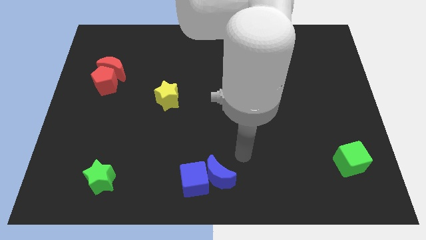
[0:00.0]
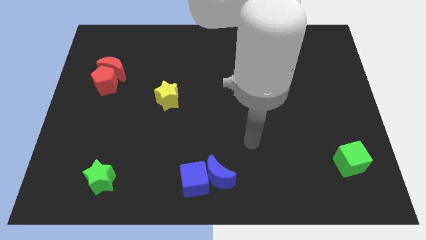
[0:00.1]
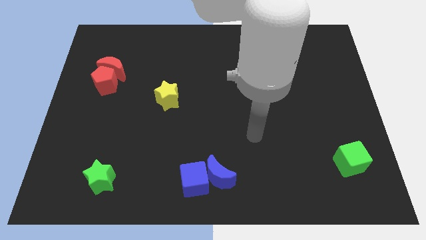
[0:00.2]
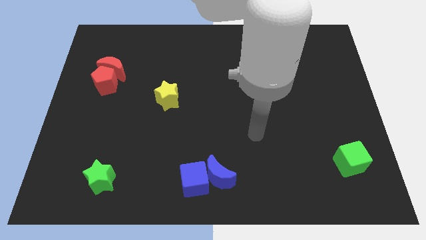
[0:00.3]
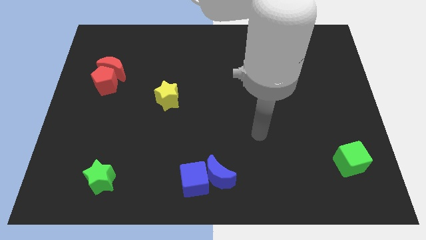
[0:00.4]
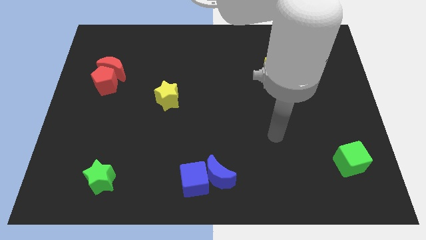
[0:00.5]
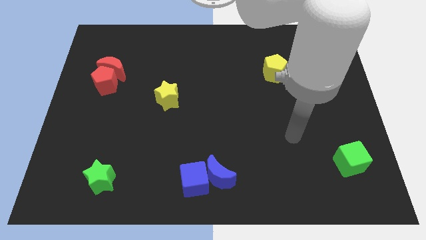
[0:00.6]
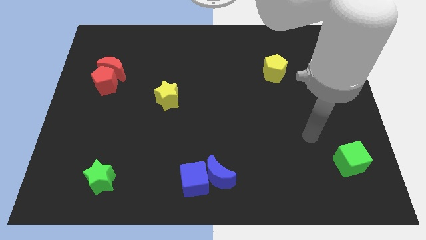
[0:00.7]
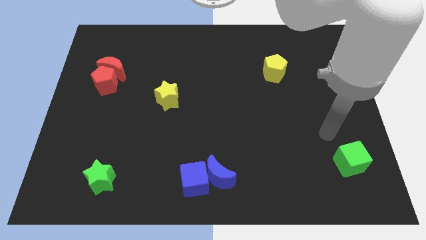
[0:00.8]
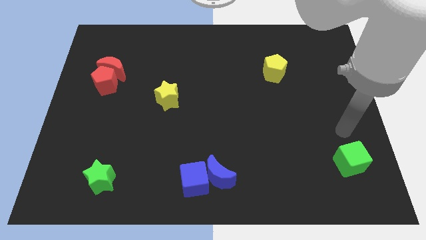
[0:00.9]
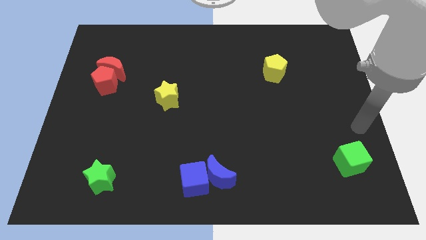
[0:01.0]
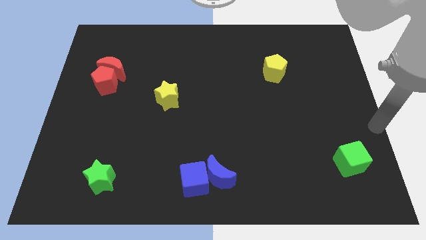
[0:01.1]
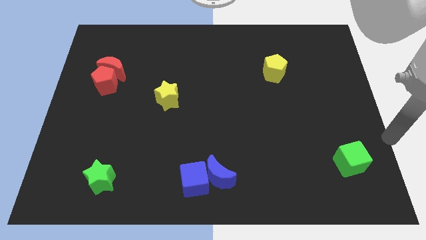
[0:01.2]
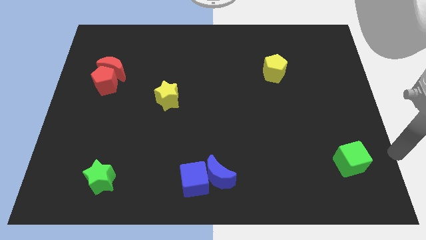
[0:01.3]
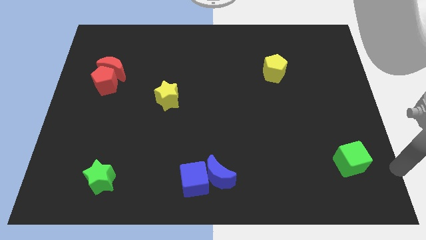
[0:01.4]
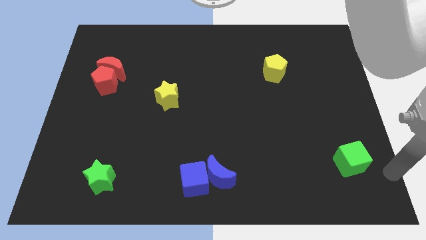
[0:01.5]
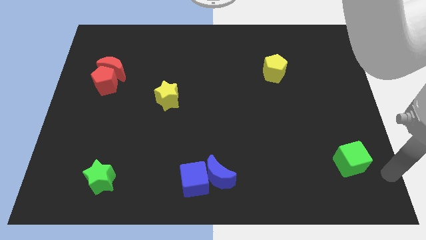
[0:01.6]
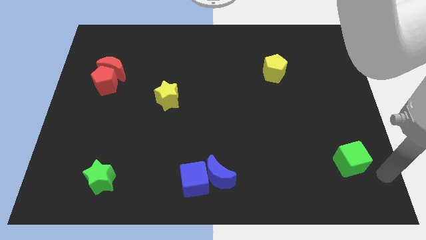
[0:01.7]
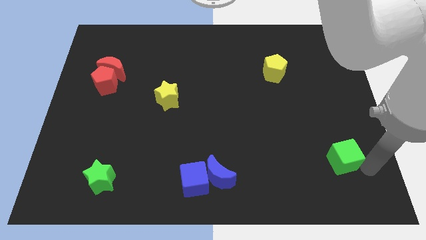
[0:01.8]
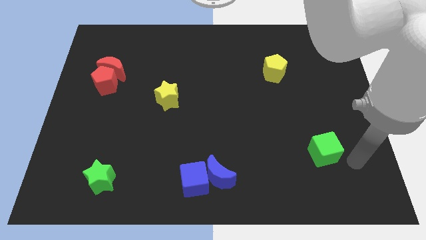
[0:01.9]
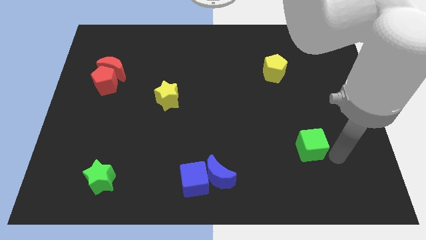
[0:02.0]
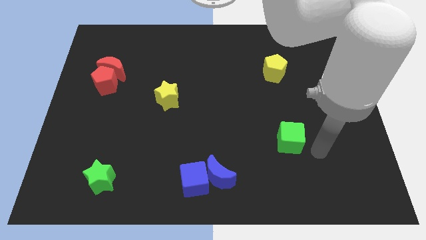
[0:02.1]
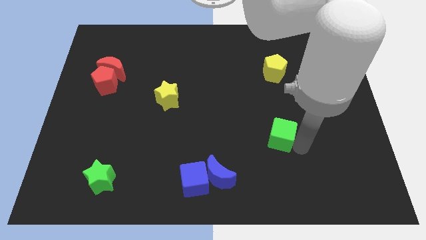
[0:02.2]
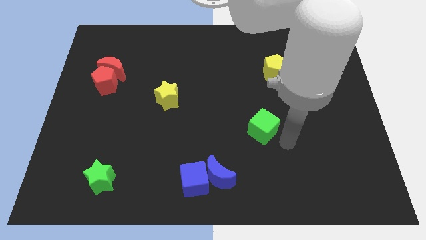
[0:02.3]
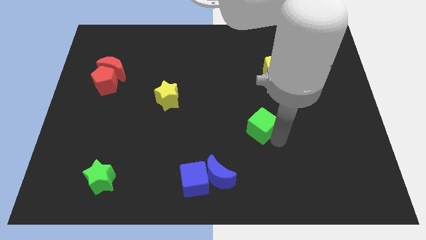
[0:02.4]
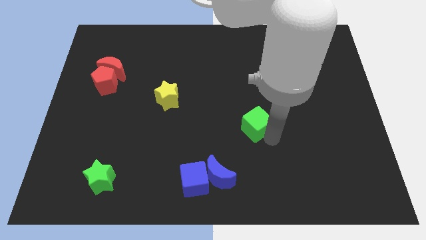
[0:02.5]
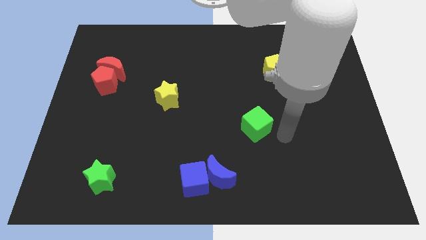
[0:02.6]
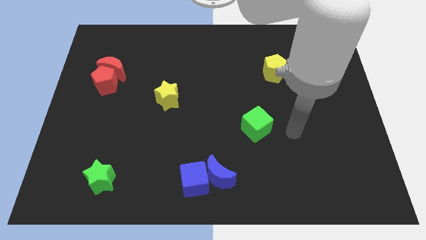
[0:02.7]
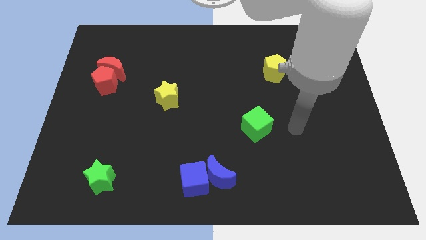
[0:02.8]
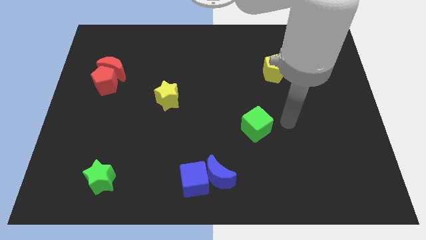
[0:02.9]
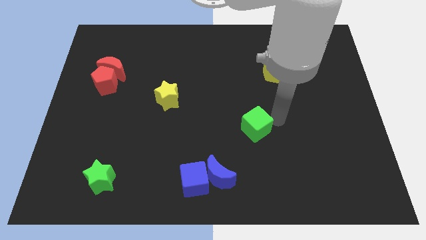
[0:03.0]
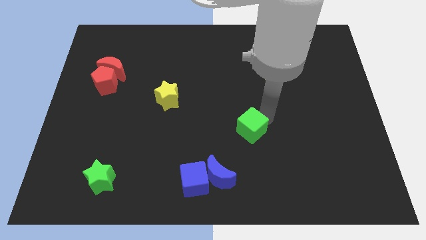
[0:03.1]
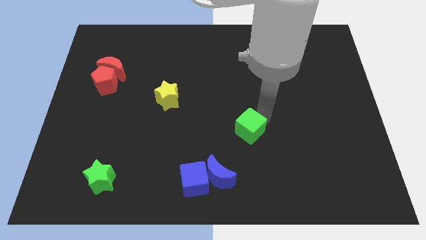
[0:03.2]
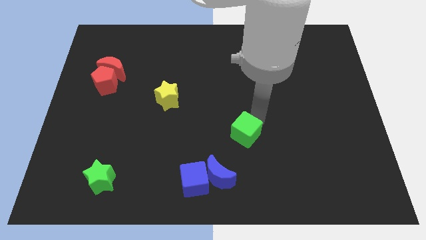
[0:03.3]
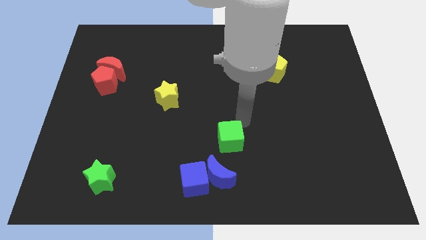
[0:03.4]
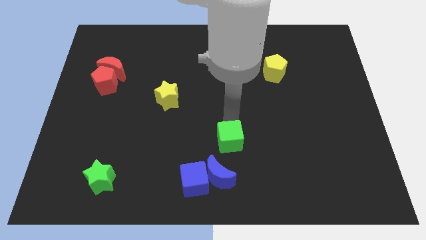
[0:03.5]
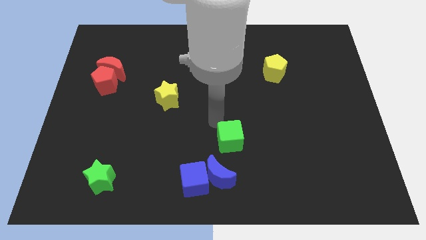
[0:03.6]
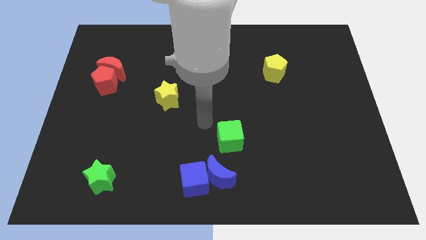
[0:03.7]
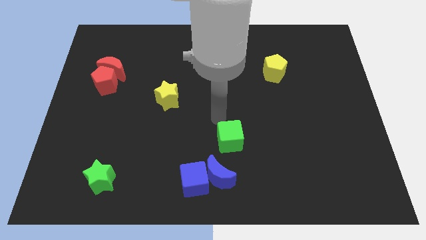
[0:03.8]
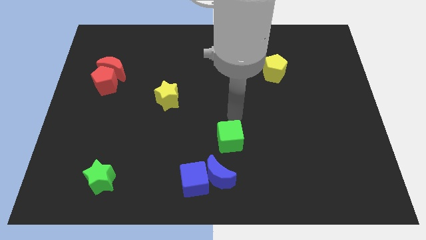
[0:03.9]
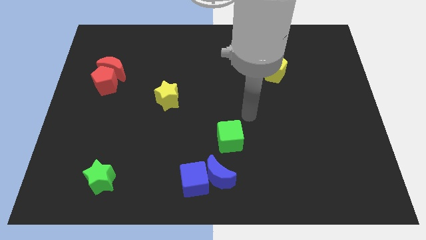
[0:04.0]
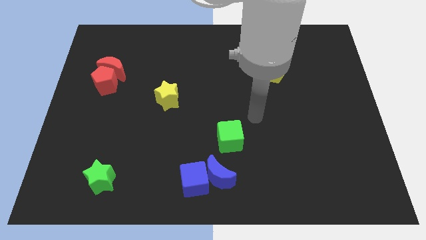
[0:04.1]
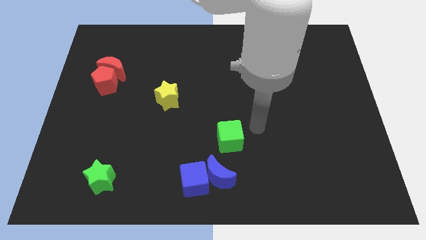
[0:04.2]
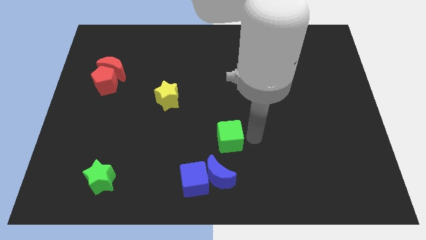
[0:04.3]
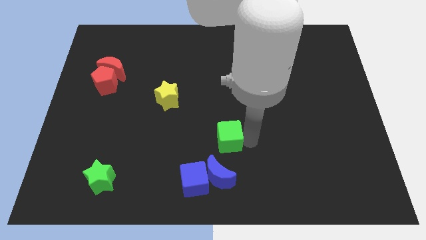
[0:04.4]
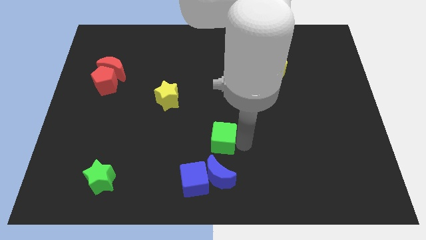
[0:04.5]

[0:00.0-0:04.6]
push the green cube above the blue crescent

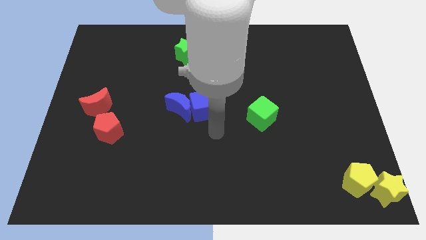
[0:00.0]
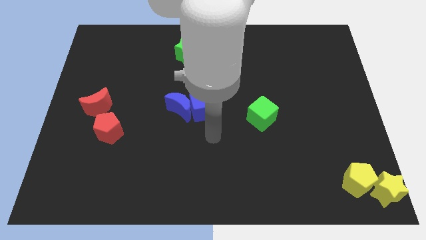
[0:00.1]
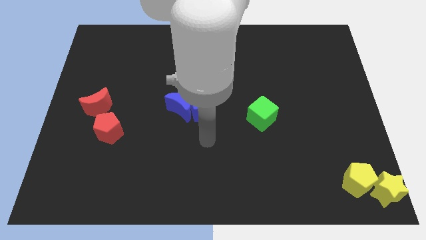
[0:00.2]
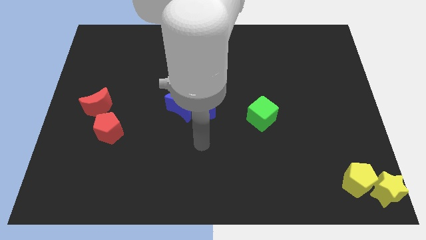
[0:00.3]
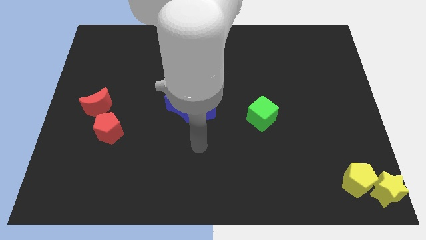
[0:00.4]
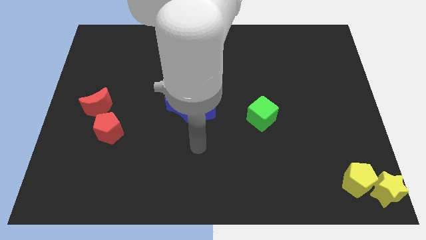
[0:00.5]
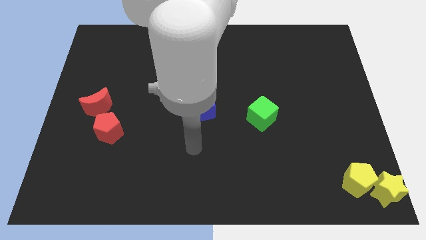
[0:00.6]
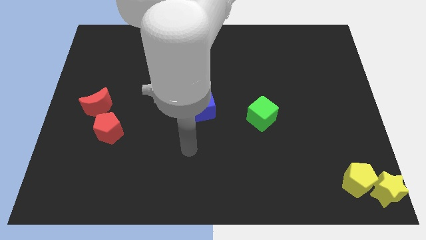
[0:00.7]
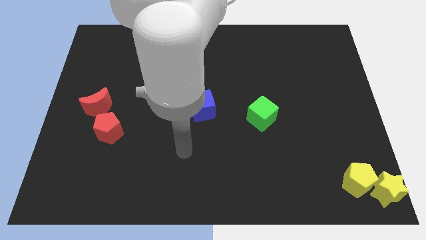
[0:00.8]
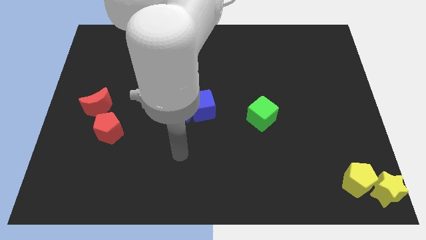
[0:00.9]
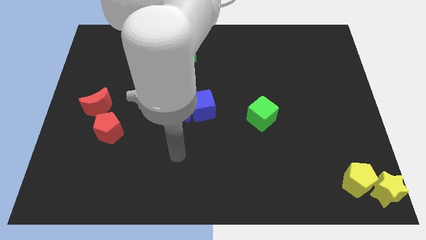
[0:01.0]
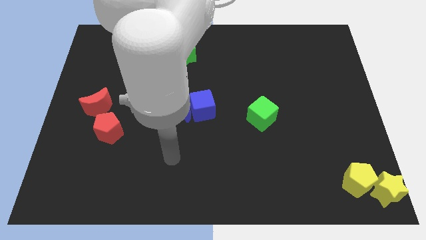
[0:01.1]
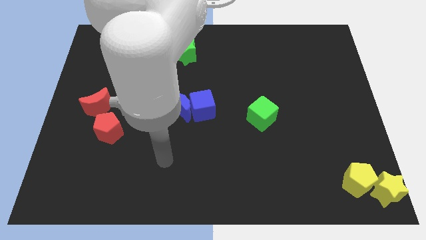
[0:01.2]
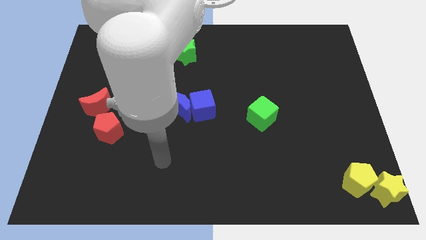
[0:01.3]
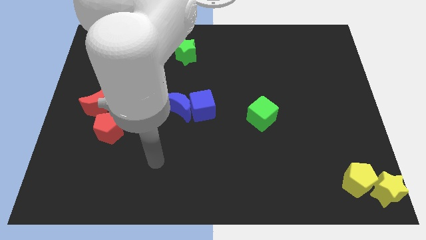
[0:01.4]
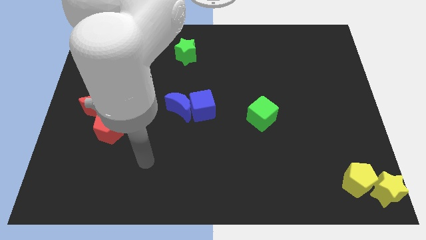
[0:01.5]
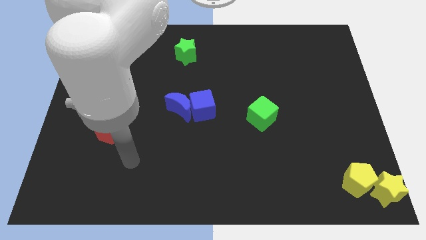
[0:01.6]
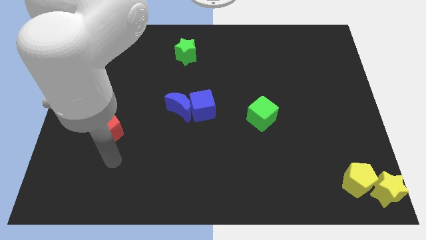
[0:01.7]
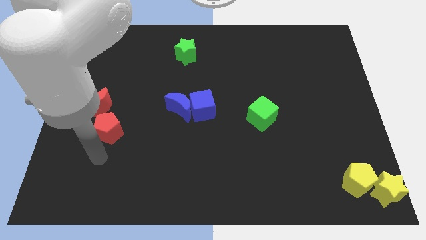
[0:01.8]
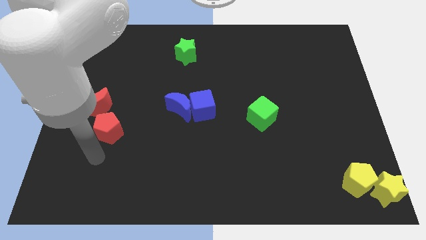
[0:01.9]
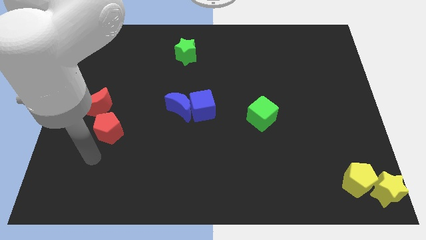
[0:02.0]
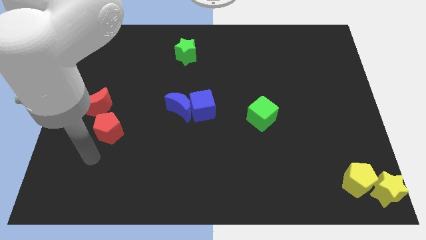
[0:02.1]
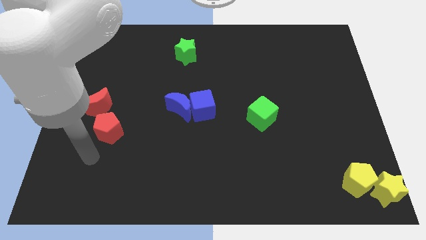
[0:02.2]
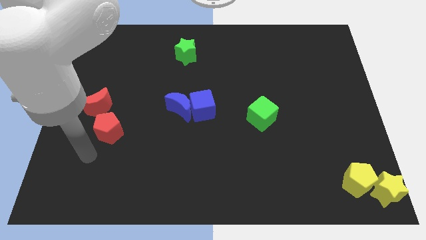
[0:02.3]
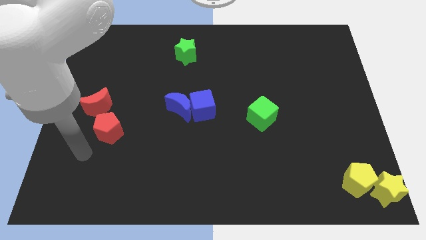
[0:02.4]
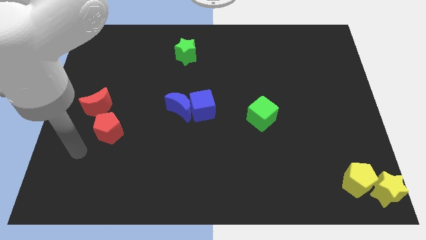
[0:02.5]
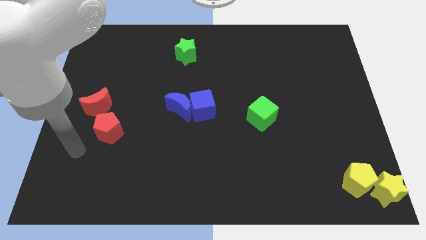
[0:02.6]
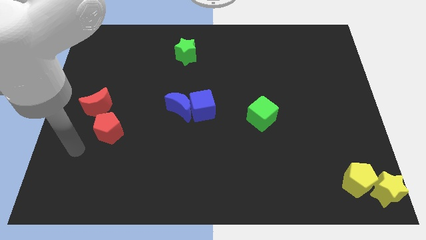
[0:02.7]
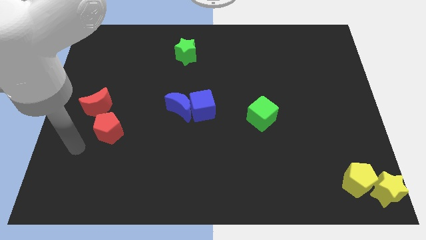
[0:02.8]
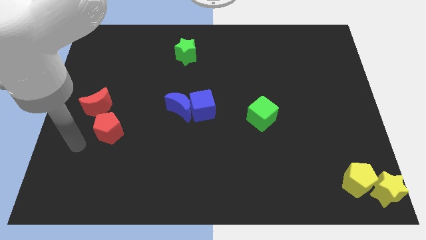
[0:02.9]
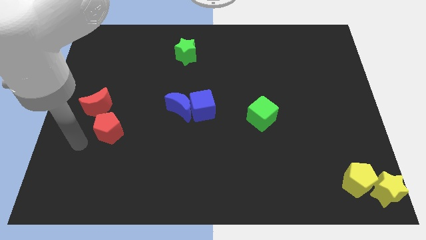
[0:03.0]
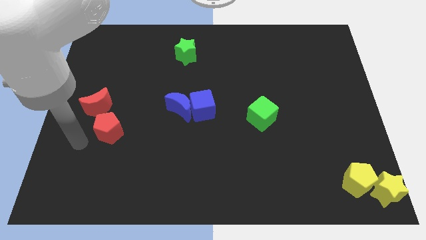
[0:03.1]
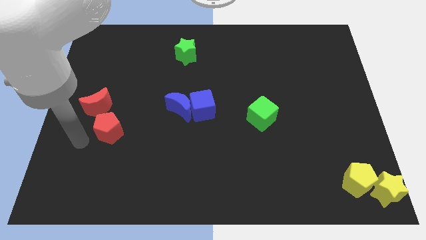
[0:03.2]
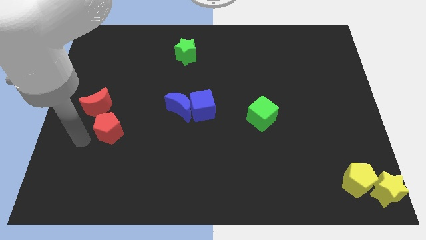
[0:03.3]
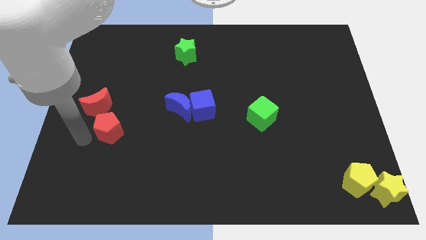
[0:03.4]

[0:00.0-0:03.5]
point the arm to the left of the red pentagon

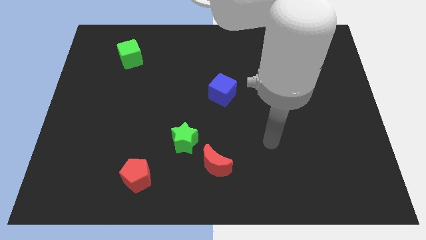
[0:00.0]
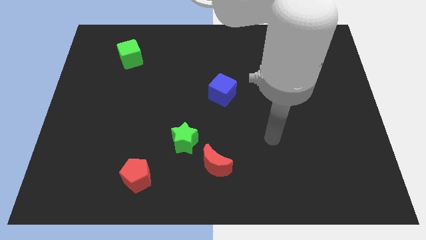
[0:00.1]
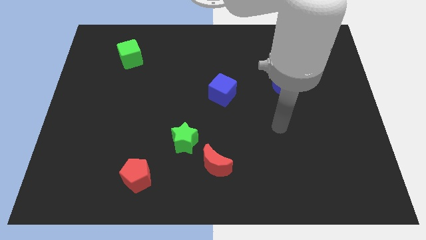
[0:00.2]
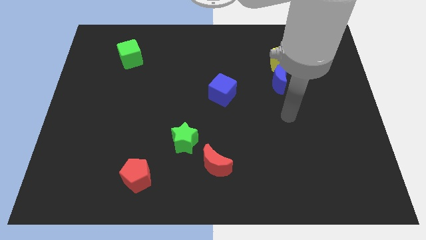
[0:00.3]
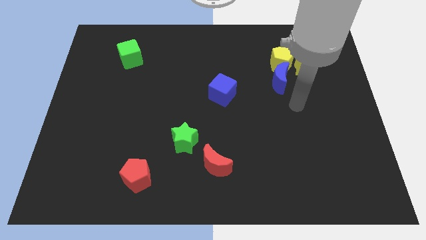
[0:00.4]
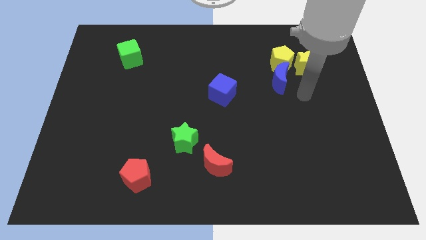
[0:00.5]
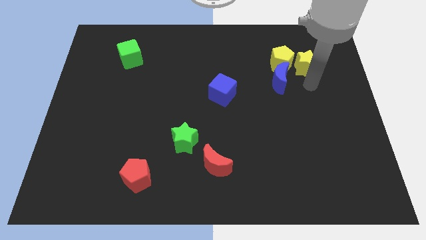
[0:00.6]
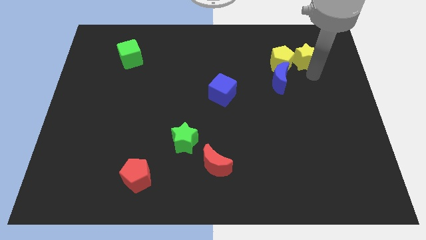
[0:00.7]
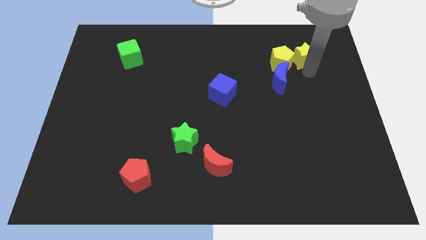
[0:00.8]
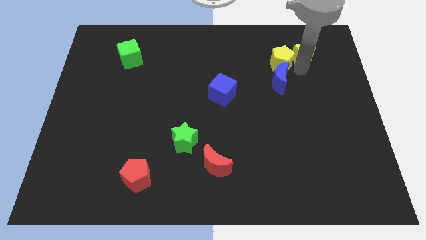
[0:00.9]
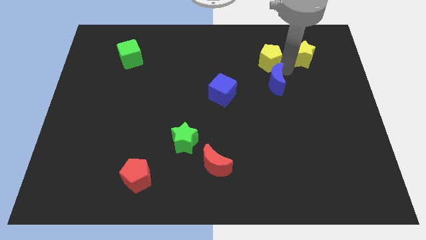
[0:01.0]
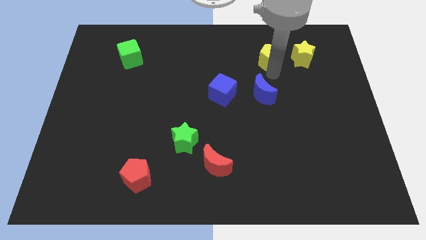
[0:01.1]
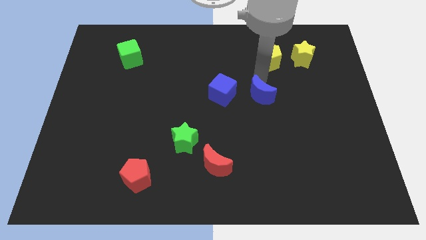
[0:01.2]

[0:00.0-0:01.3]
push the blue crescent slightly to the bottom
